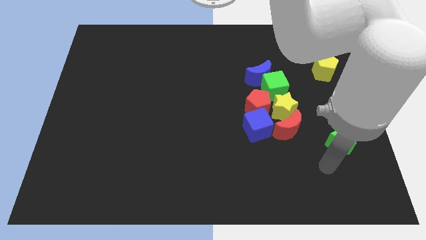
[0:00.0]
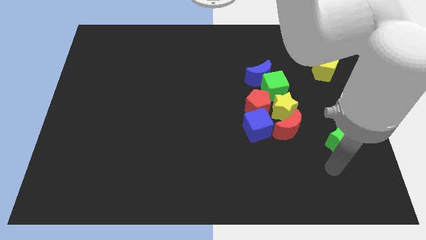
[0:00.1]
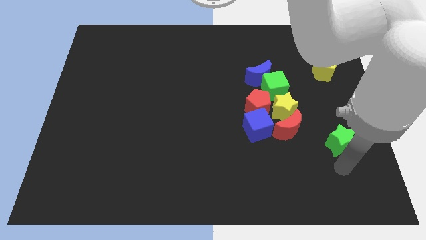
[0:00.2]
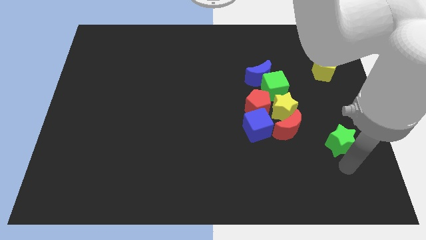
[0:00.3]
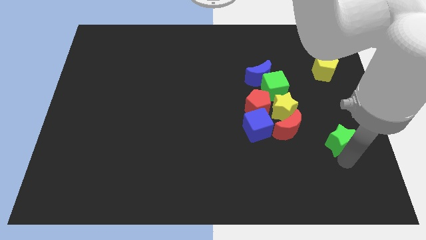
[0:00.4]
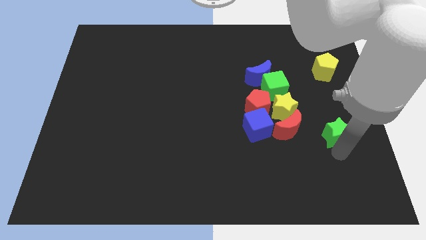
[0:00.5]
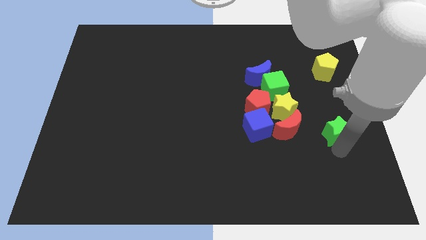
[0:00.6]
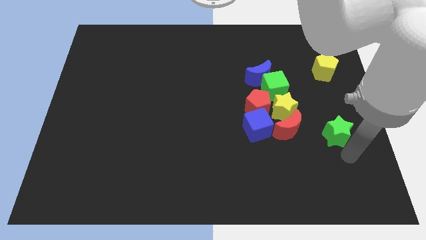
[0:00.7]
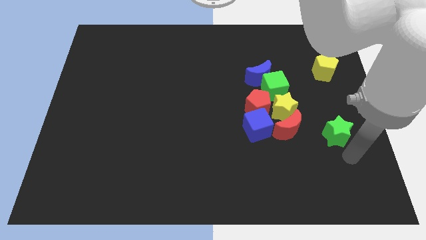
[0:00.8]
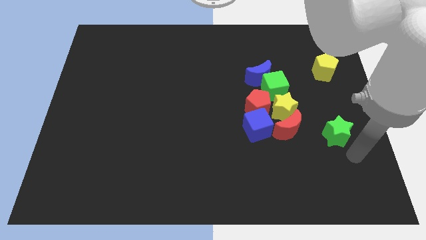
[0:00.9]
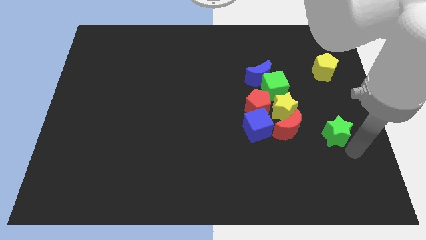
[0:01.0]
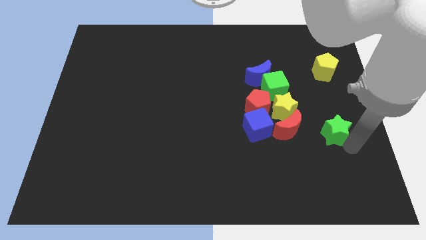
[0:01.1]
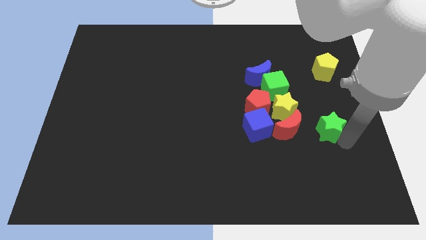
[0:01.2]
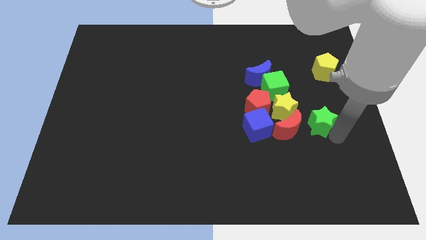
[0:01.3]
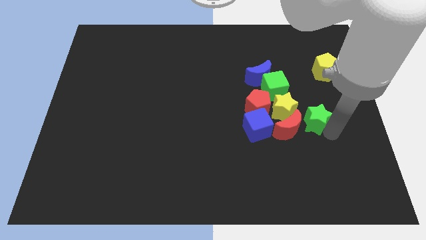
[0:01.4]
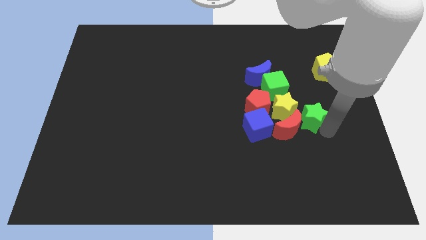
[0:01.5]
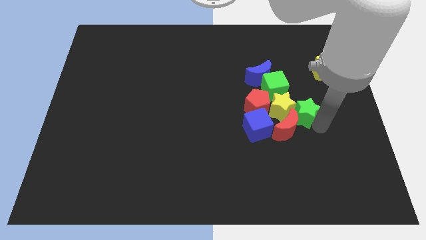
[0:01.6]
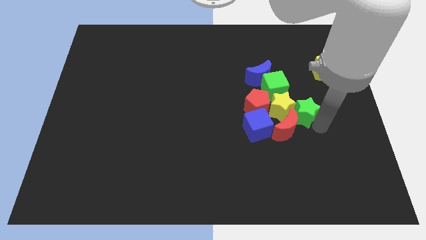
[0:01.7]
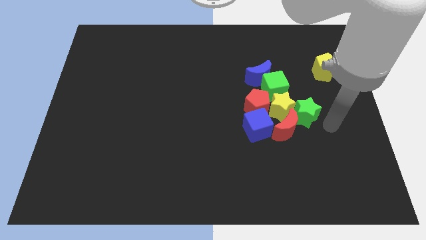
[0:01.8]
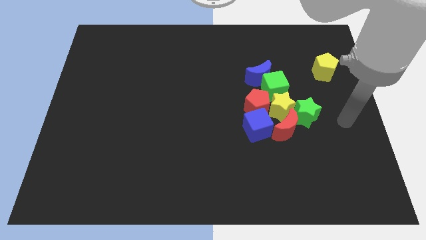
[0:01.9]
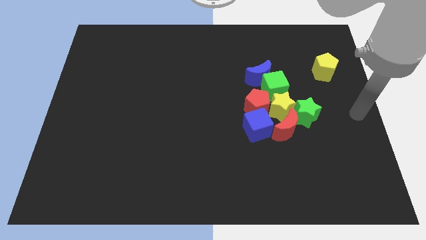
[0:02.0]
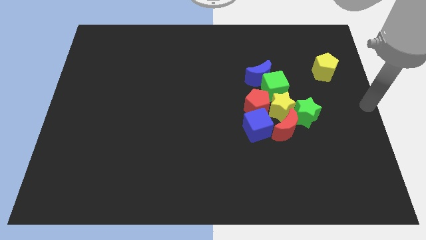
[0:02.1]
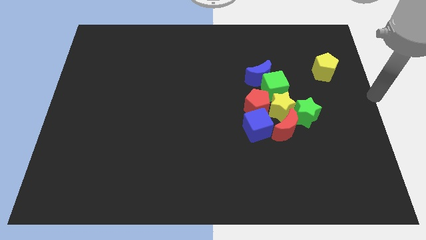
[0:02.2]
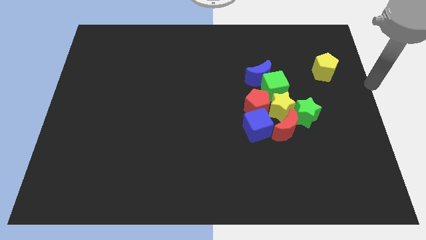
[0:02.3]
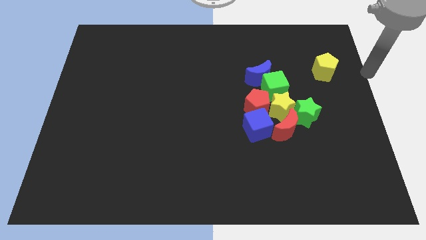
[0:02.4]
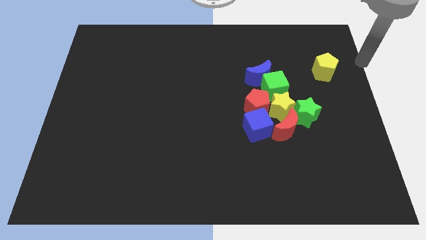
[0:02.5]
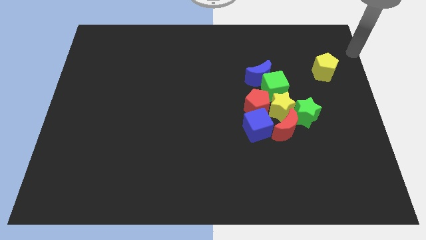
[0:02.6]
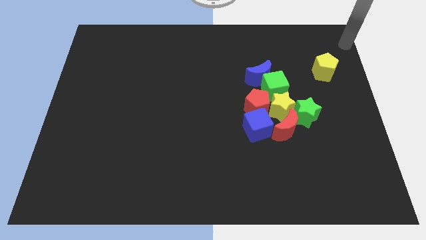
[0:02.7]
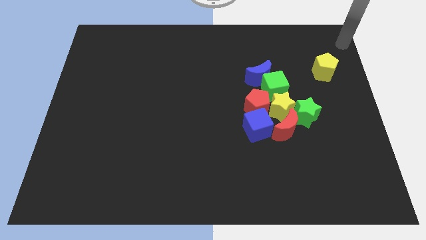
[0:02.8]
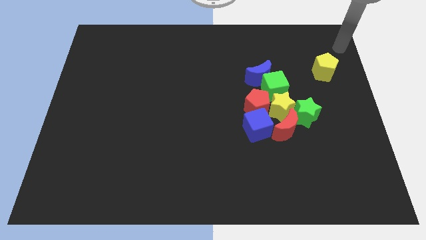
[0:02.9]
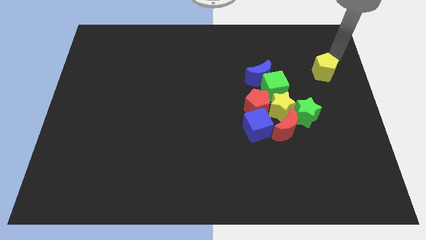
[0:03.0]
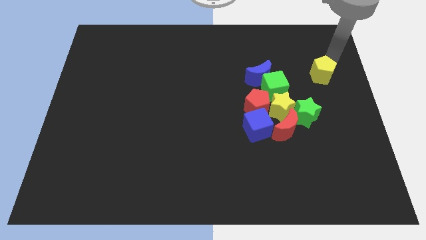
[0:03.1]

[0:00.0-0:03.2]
slide the green star into the yellow star

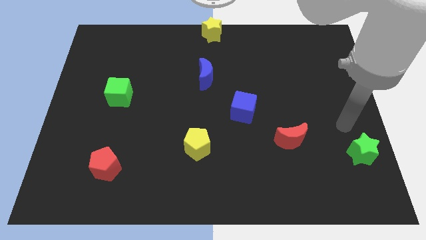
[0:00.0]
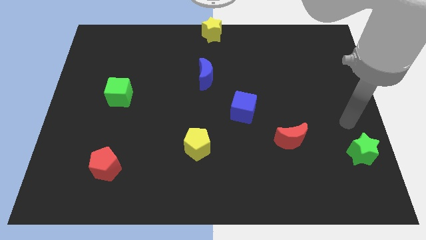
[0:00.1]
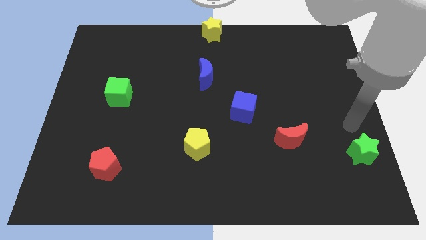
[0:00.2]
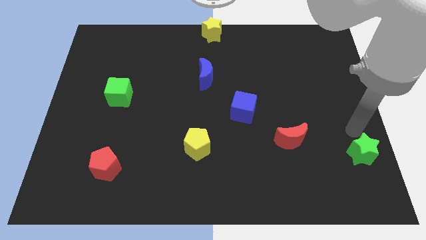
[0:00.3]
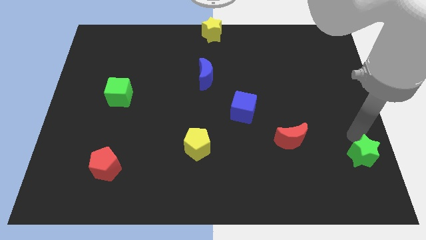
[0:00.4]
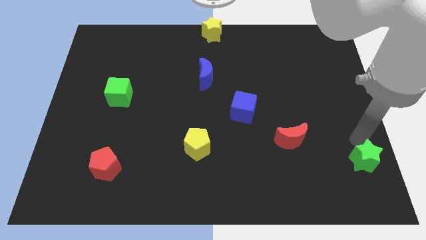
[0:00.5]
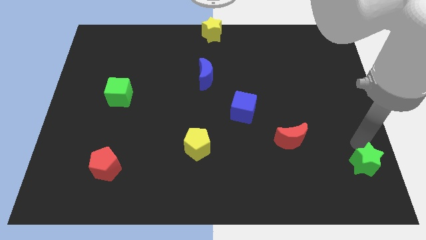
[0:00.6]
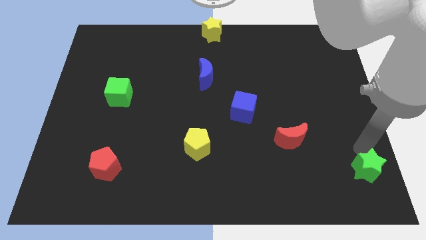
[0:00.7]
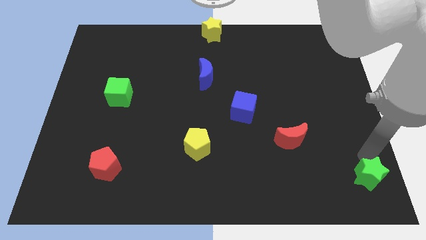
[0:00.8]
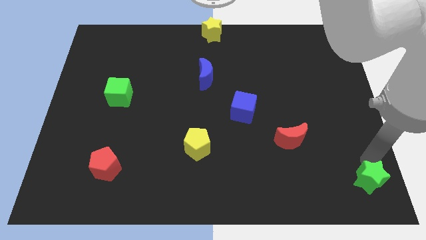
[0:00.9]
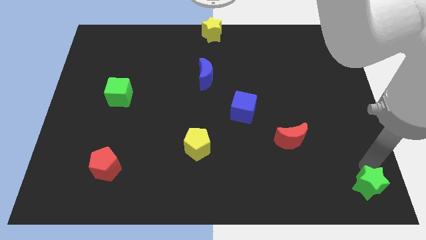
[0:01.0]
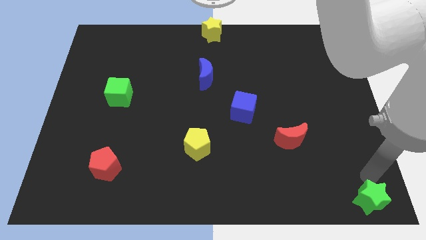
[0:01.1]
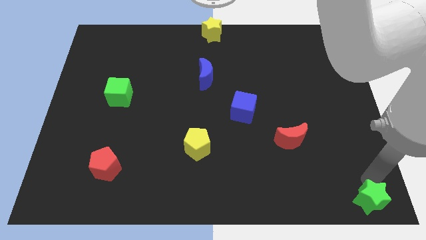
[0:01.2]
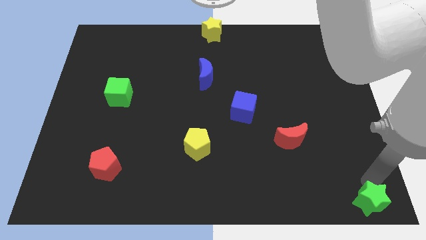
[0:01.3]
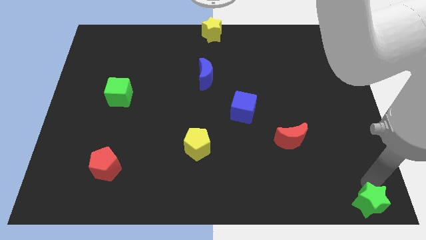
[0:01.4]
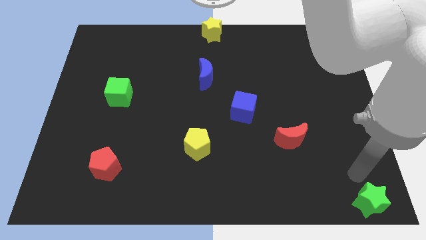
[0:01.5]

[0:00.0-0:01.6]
push the green star to the bottom right corner

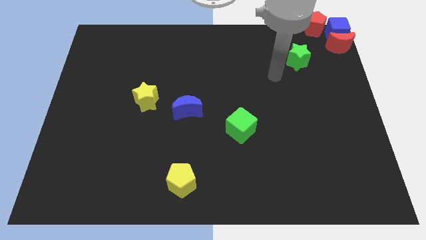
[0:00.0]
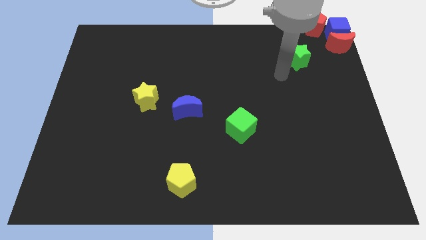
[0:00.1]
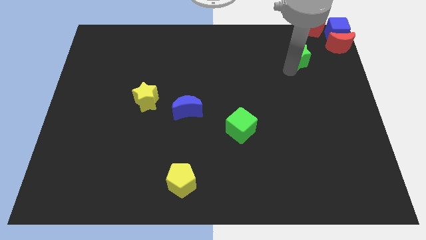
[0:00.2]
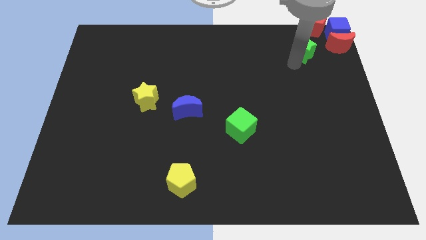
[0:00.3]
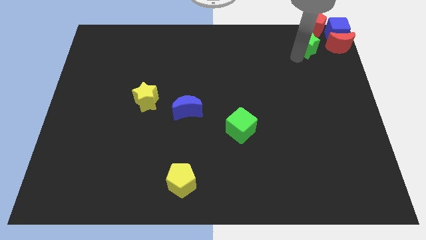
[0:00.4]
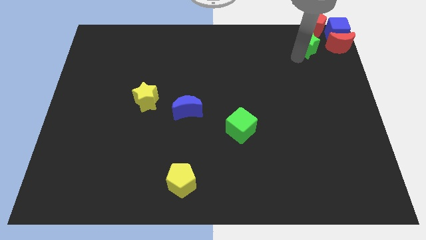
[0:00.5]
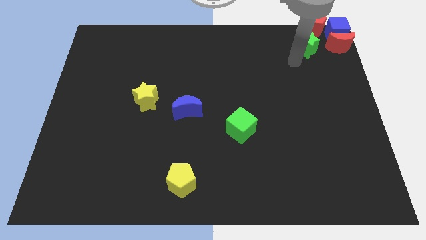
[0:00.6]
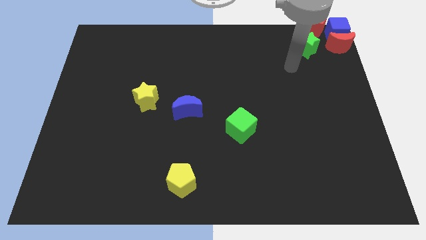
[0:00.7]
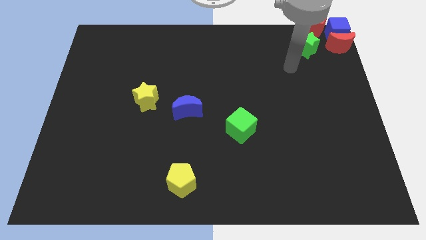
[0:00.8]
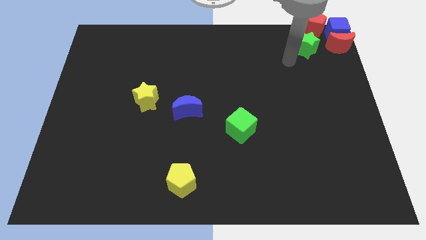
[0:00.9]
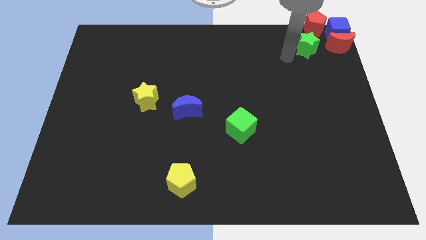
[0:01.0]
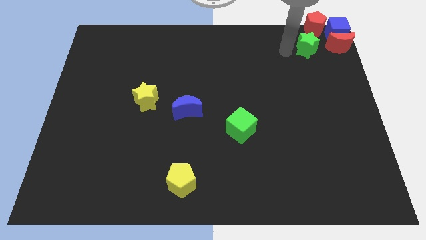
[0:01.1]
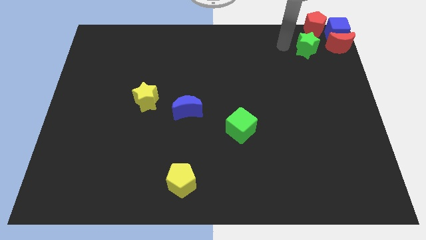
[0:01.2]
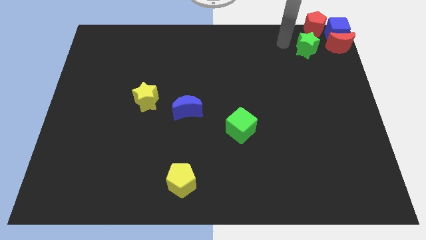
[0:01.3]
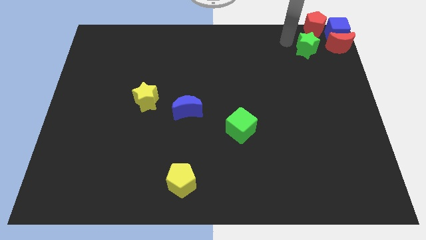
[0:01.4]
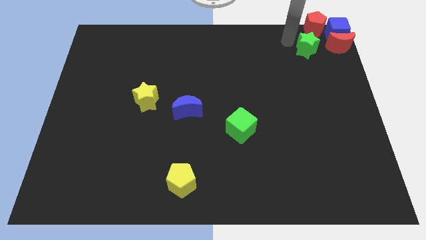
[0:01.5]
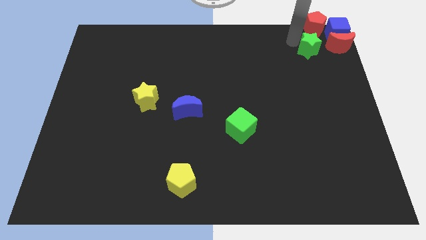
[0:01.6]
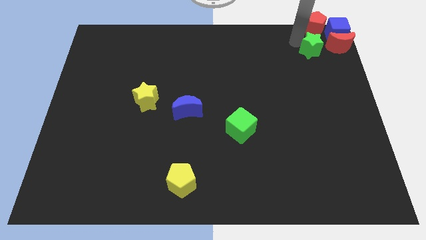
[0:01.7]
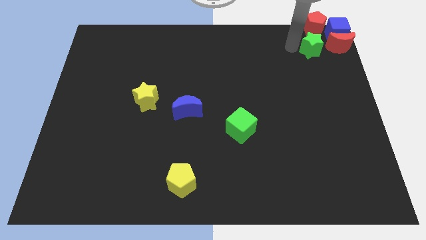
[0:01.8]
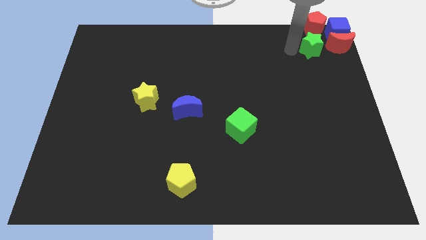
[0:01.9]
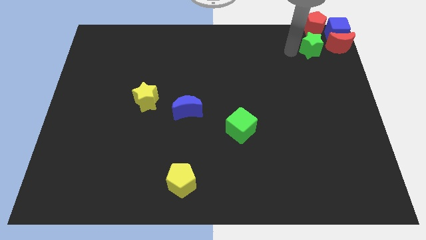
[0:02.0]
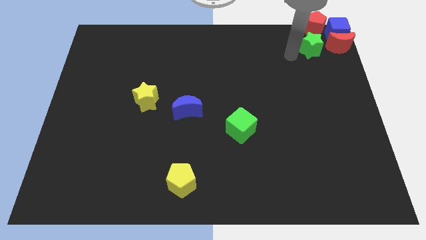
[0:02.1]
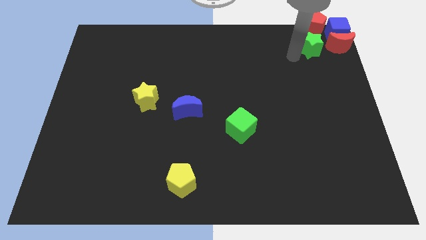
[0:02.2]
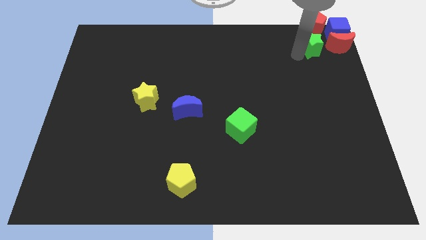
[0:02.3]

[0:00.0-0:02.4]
move the green star between the red pentagon and red crescent

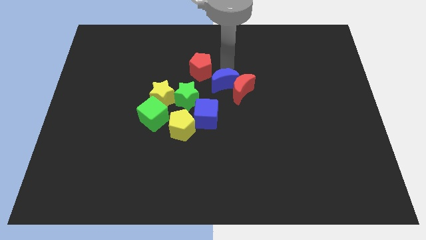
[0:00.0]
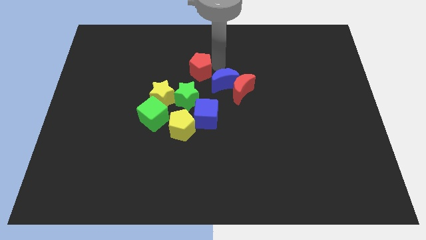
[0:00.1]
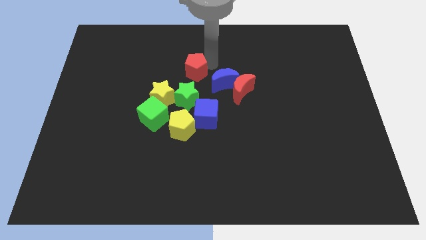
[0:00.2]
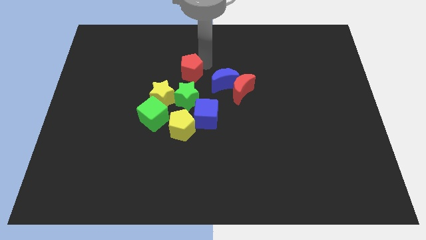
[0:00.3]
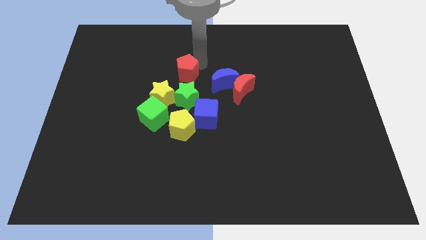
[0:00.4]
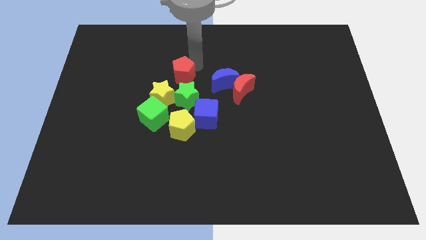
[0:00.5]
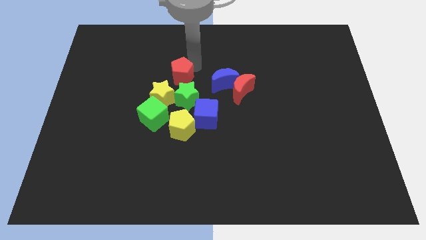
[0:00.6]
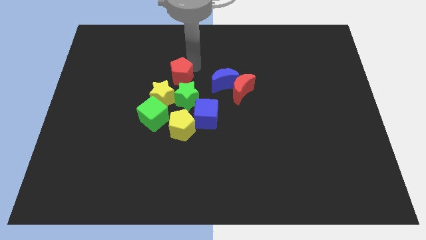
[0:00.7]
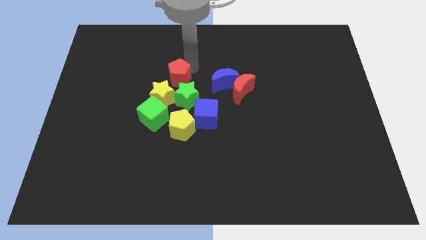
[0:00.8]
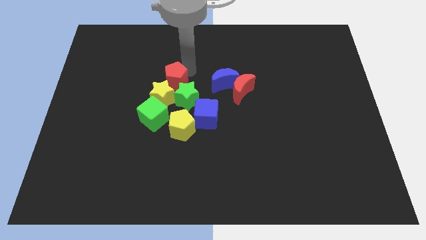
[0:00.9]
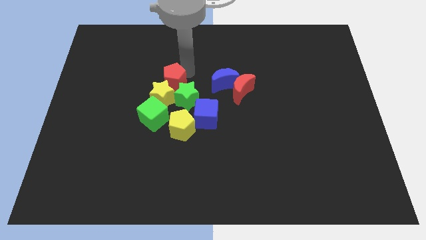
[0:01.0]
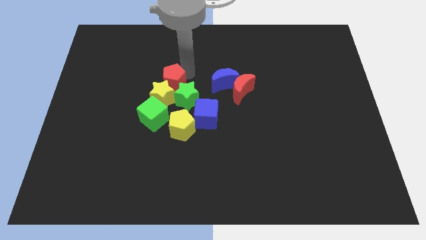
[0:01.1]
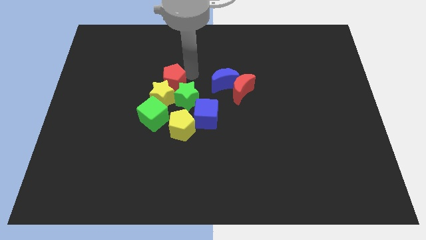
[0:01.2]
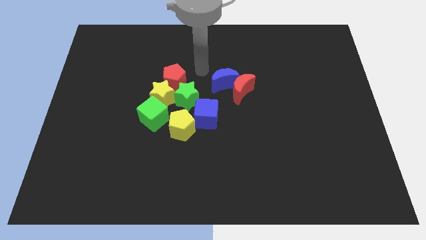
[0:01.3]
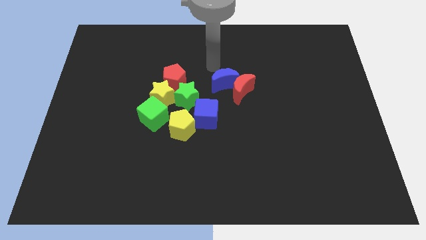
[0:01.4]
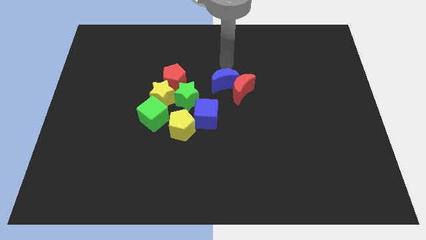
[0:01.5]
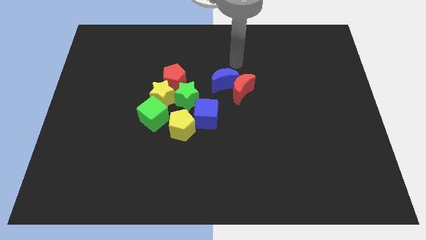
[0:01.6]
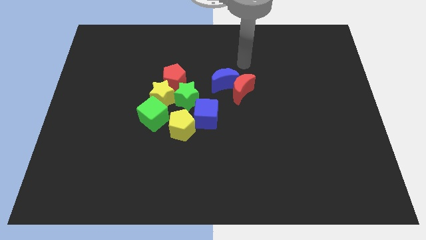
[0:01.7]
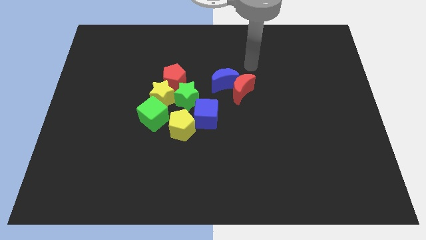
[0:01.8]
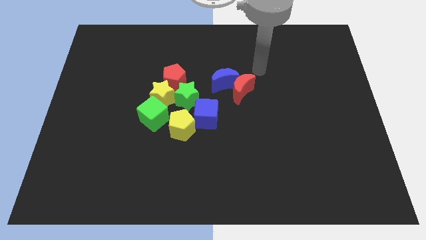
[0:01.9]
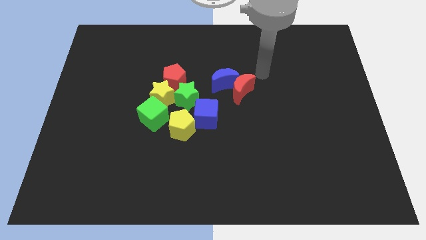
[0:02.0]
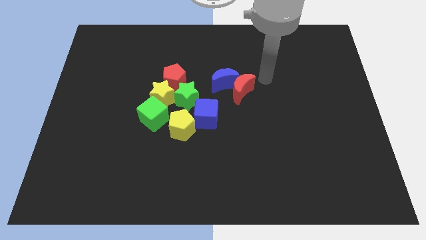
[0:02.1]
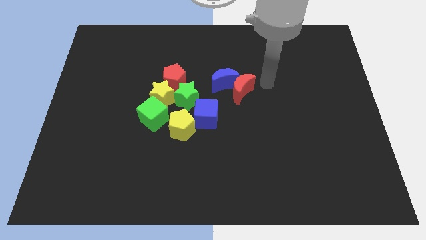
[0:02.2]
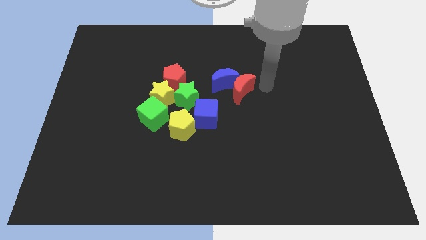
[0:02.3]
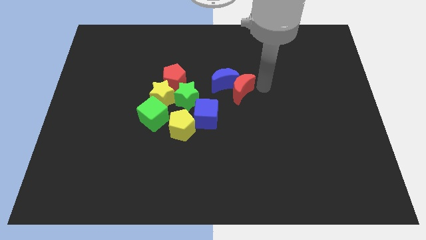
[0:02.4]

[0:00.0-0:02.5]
put the red pentagon at the top center of the yellow star and green star
